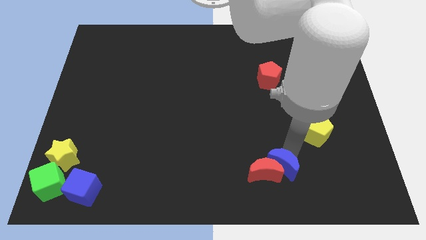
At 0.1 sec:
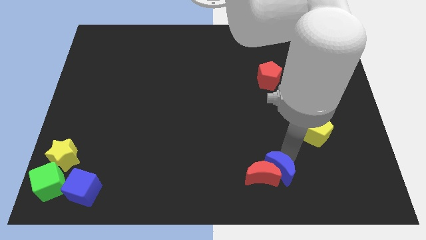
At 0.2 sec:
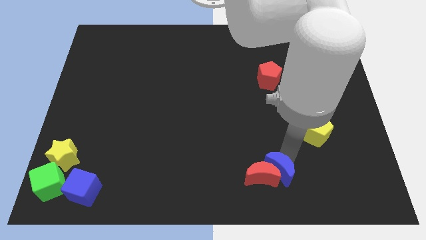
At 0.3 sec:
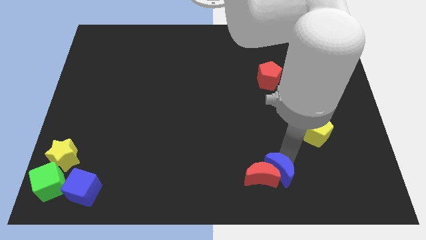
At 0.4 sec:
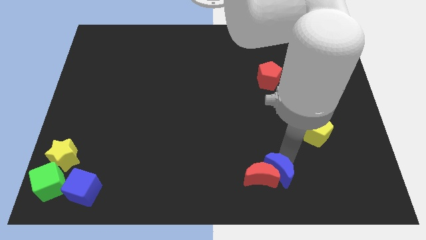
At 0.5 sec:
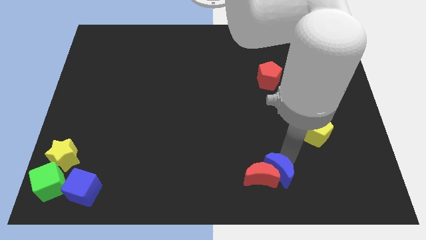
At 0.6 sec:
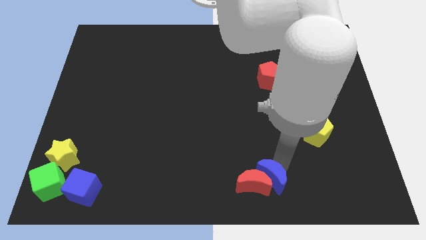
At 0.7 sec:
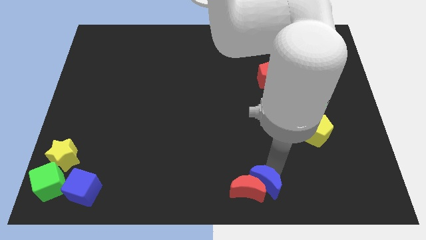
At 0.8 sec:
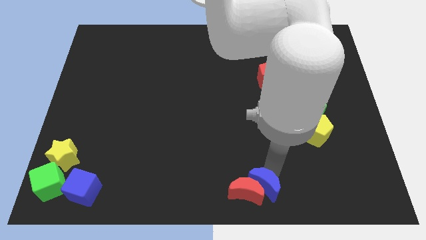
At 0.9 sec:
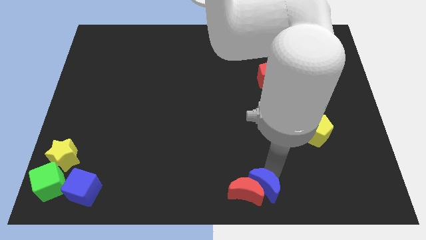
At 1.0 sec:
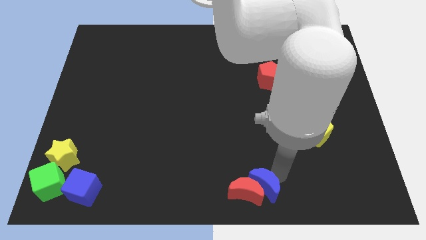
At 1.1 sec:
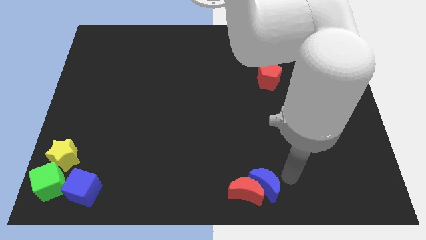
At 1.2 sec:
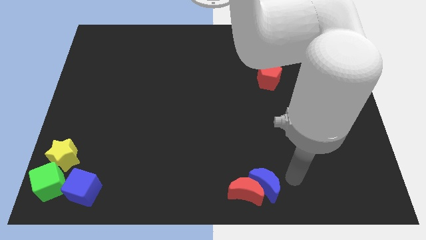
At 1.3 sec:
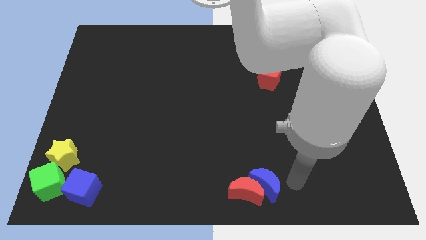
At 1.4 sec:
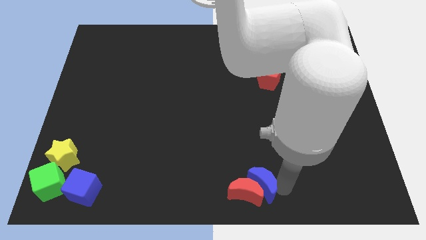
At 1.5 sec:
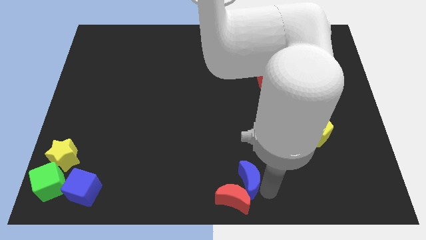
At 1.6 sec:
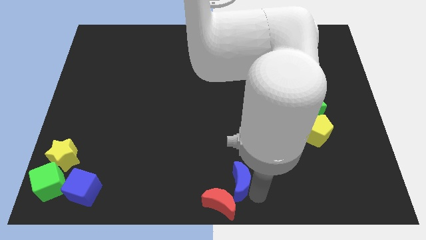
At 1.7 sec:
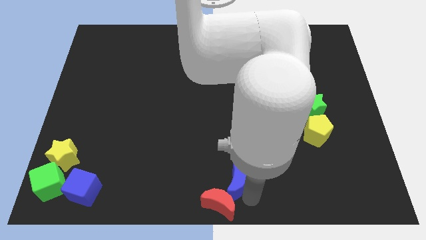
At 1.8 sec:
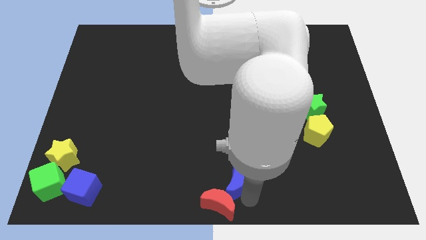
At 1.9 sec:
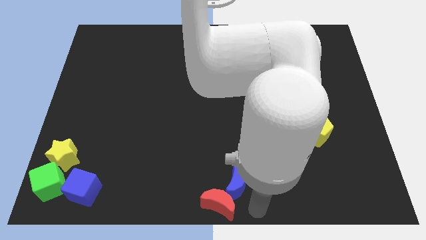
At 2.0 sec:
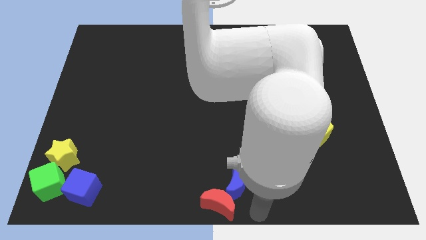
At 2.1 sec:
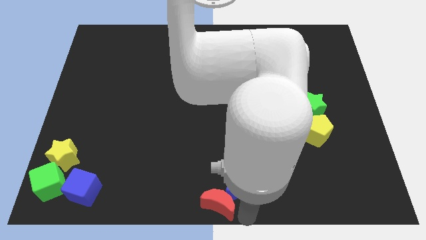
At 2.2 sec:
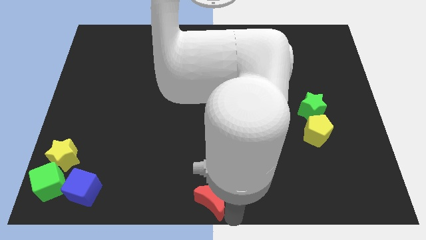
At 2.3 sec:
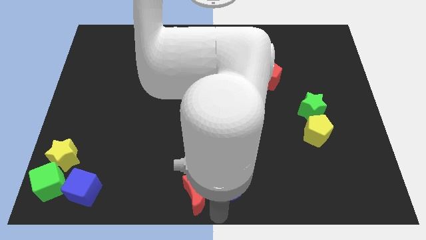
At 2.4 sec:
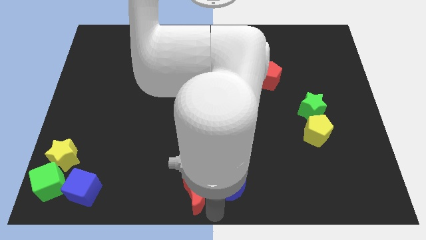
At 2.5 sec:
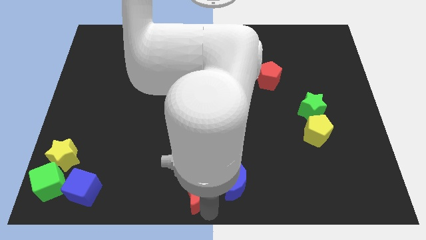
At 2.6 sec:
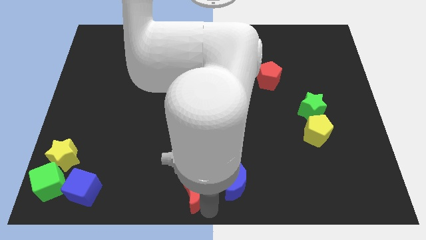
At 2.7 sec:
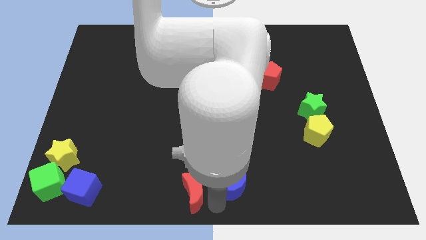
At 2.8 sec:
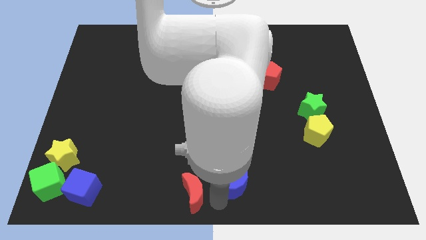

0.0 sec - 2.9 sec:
separate the red moon and blue moon

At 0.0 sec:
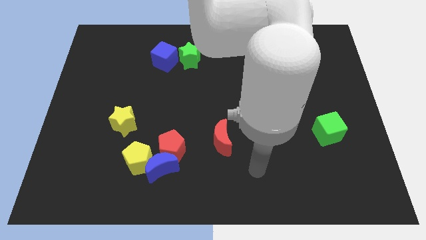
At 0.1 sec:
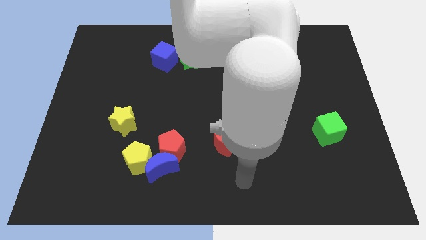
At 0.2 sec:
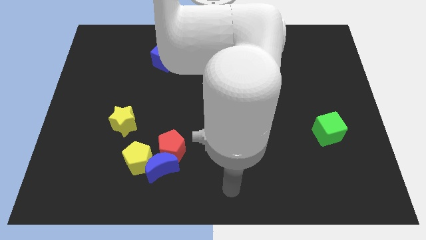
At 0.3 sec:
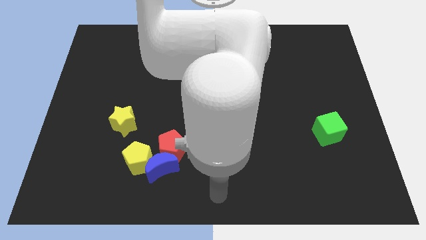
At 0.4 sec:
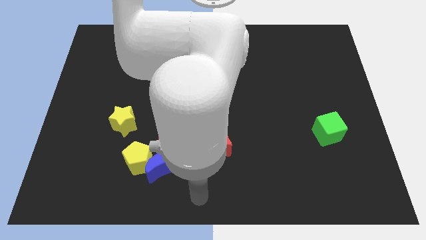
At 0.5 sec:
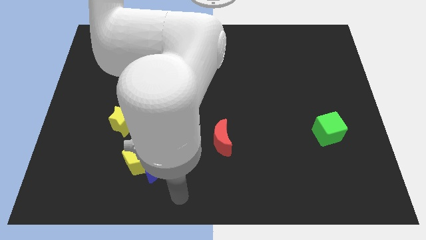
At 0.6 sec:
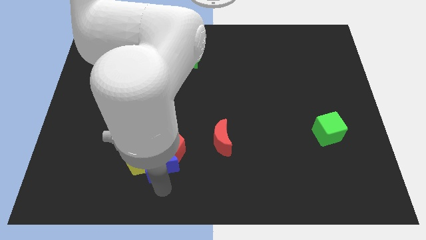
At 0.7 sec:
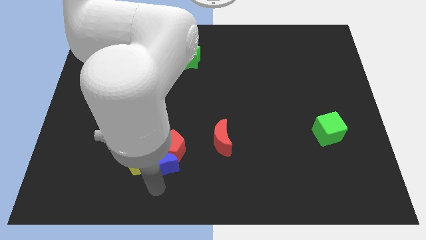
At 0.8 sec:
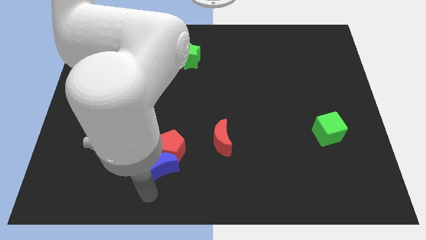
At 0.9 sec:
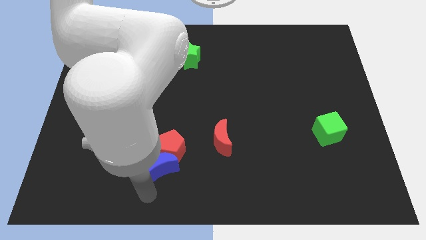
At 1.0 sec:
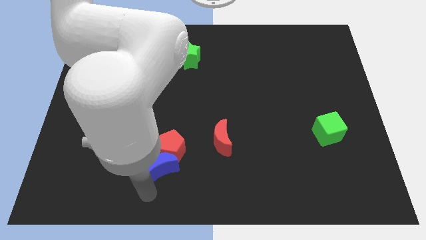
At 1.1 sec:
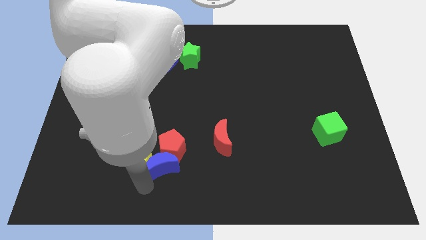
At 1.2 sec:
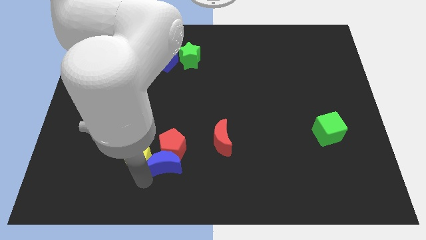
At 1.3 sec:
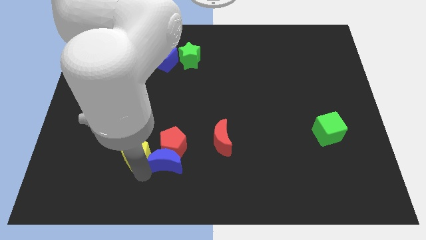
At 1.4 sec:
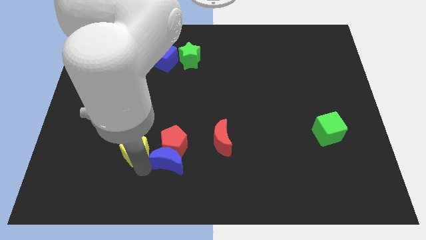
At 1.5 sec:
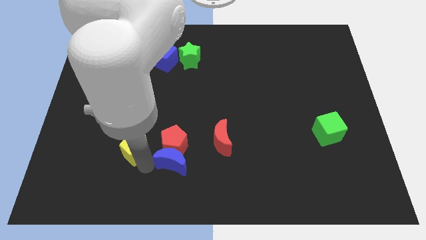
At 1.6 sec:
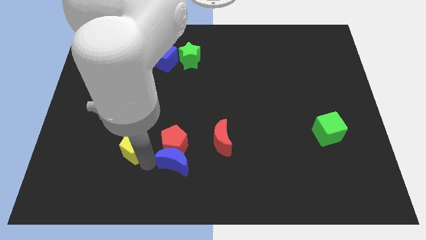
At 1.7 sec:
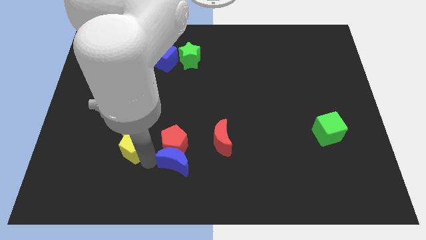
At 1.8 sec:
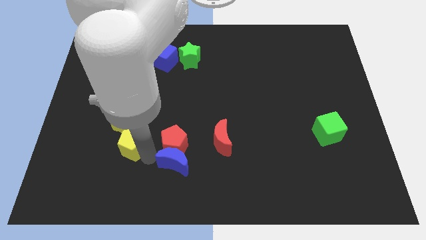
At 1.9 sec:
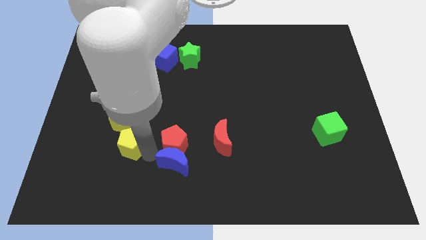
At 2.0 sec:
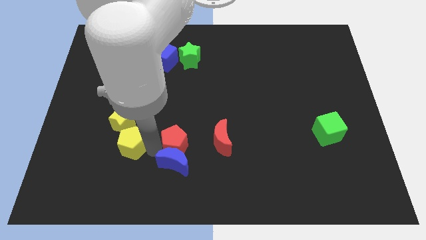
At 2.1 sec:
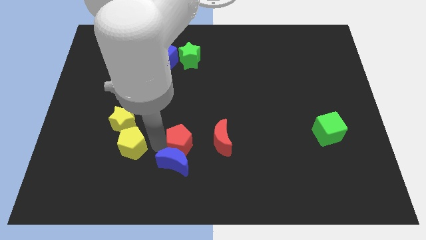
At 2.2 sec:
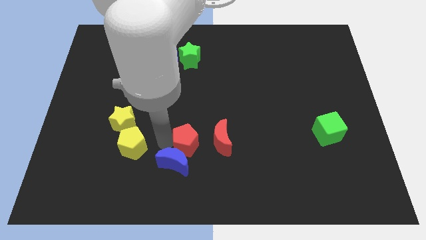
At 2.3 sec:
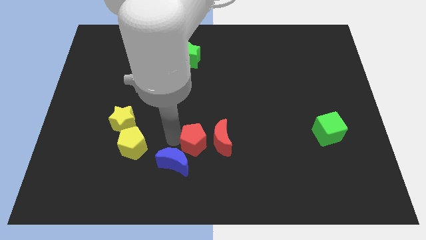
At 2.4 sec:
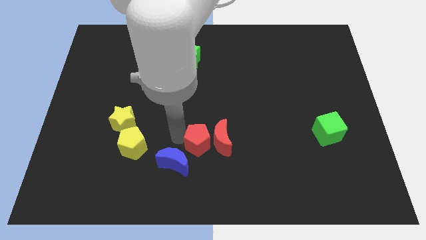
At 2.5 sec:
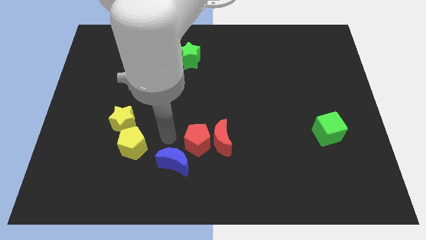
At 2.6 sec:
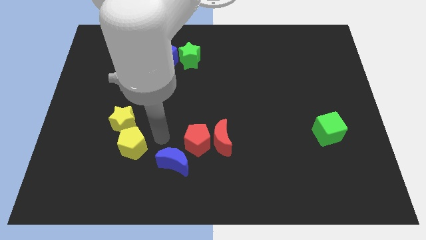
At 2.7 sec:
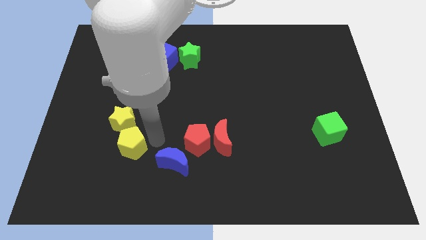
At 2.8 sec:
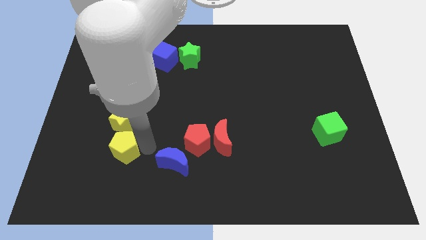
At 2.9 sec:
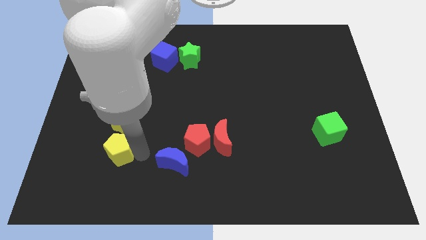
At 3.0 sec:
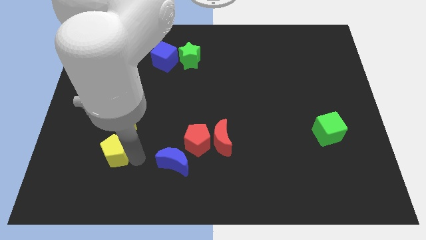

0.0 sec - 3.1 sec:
move red pentagon beside red moon

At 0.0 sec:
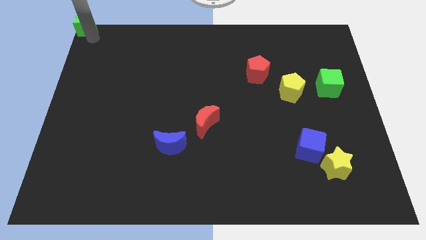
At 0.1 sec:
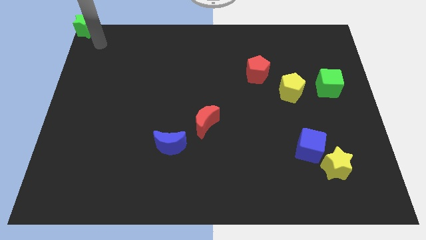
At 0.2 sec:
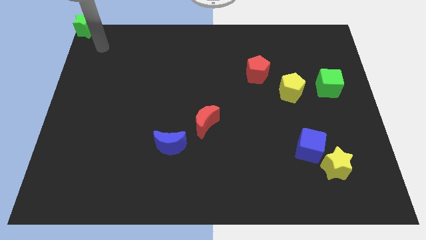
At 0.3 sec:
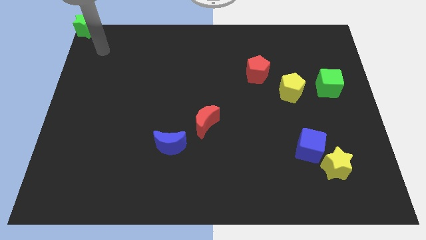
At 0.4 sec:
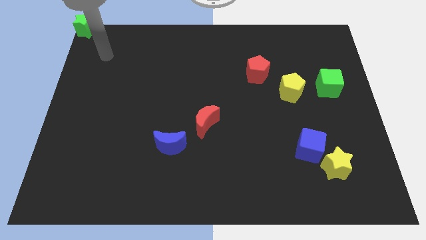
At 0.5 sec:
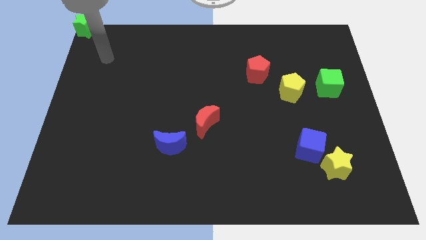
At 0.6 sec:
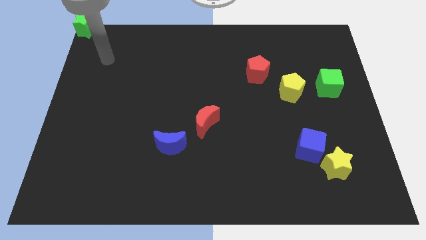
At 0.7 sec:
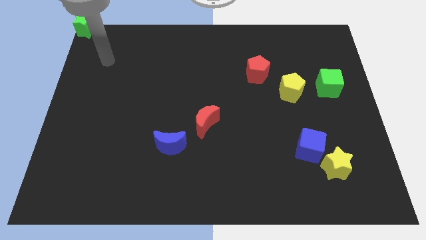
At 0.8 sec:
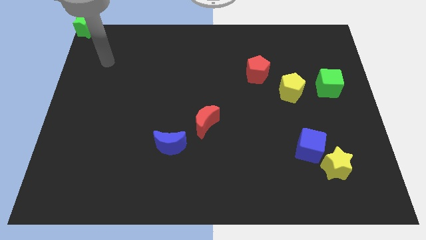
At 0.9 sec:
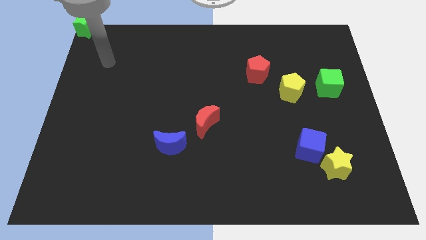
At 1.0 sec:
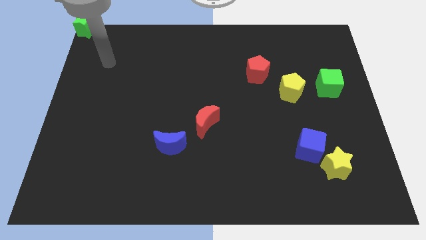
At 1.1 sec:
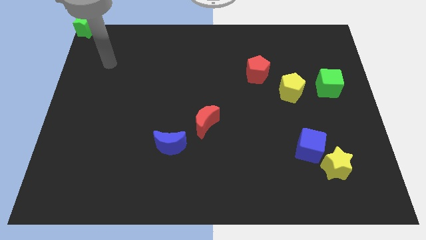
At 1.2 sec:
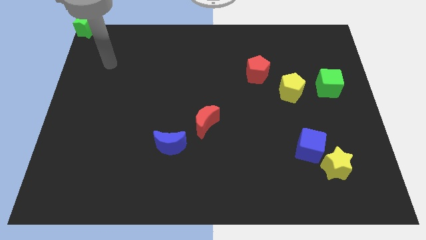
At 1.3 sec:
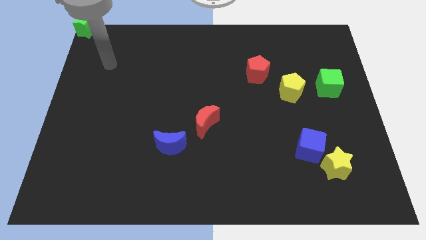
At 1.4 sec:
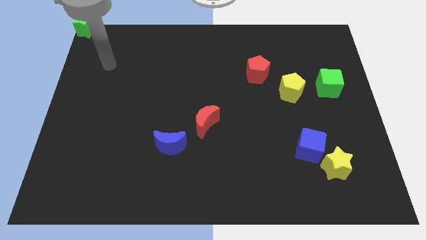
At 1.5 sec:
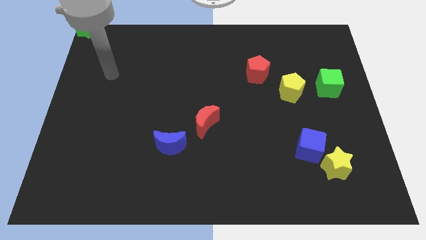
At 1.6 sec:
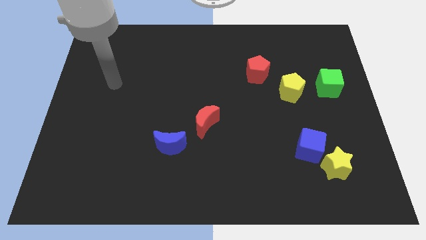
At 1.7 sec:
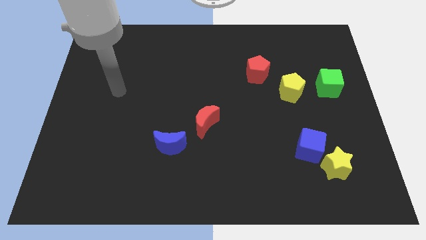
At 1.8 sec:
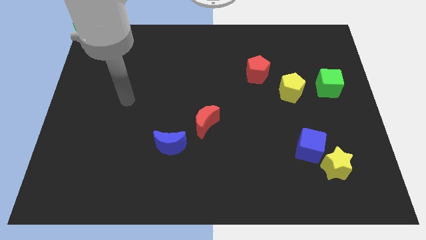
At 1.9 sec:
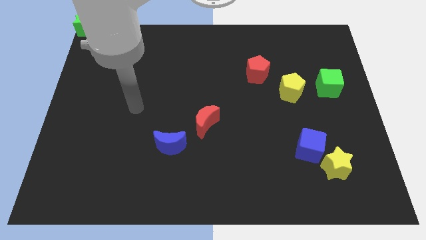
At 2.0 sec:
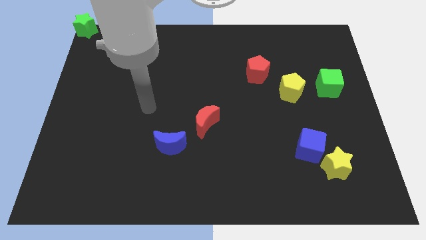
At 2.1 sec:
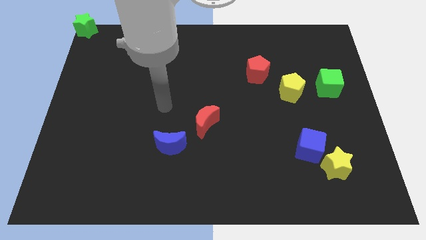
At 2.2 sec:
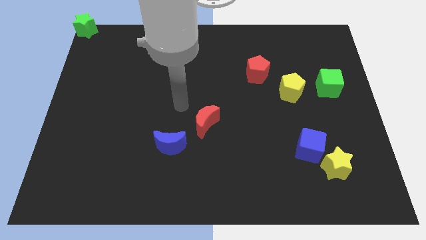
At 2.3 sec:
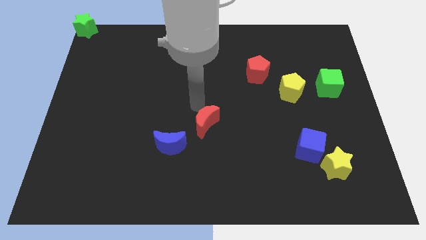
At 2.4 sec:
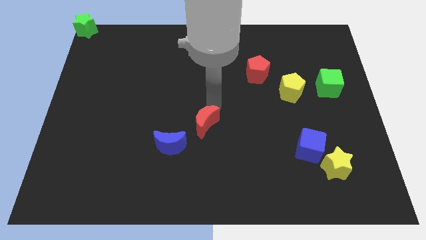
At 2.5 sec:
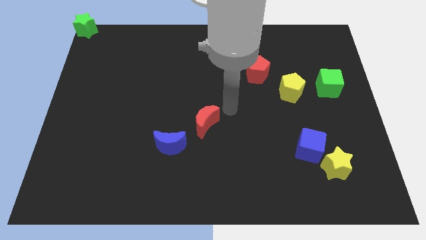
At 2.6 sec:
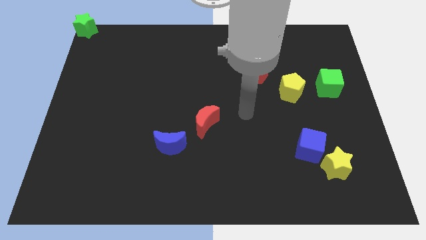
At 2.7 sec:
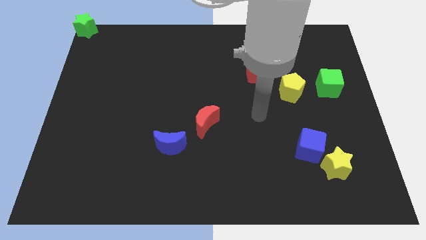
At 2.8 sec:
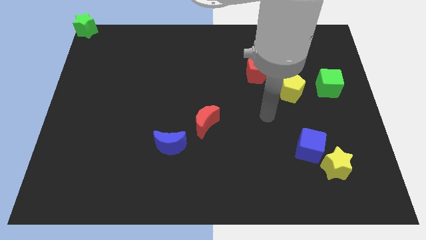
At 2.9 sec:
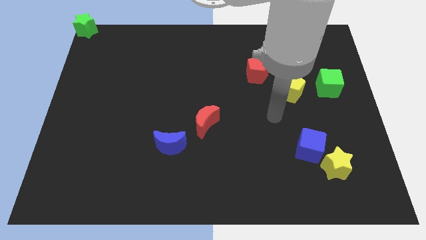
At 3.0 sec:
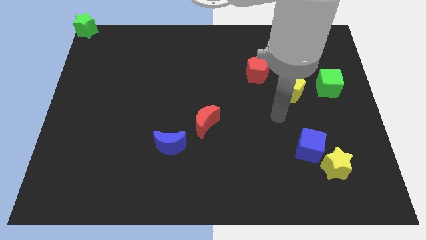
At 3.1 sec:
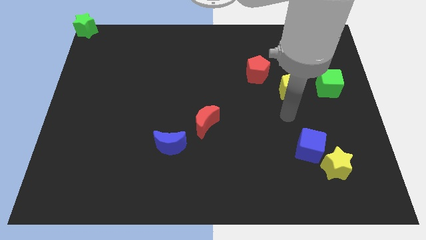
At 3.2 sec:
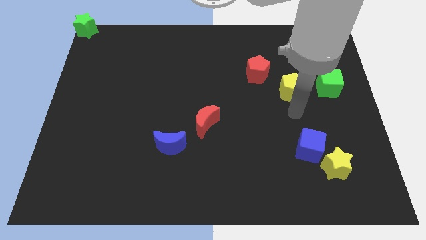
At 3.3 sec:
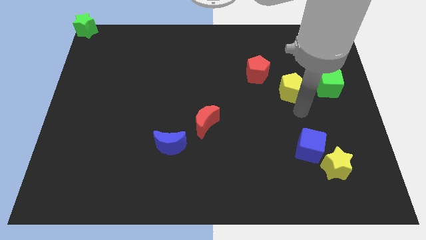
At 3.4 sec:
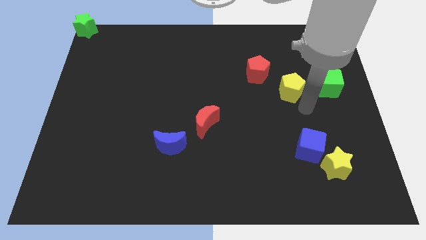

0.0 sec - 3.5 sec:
move the arm down to the yellow pentagon
